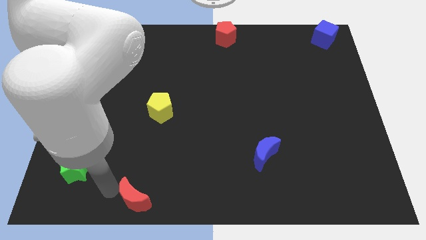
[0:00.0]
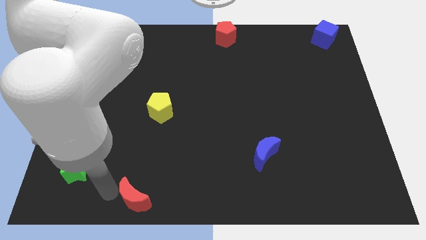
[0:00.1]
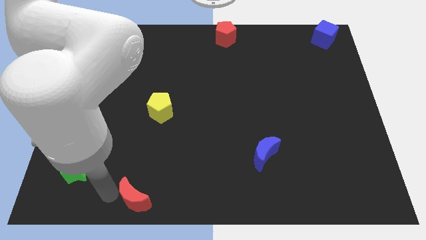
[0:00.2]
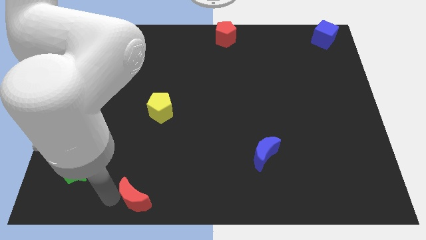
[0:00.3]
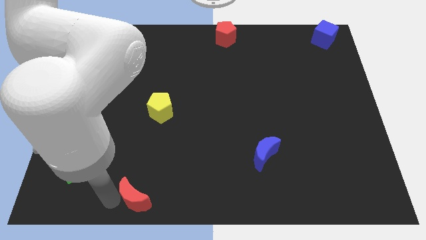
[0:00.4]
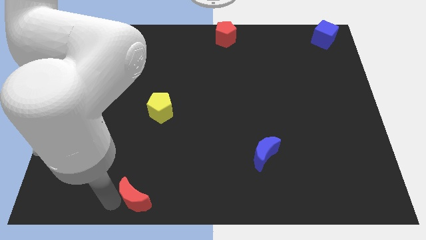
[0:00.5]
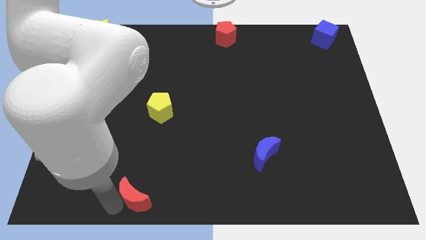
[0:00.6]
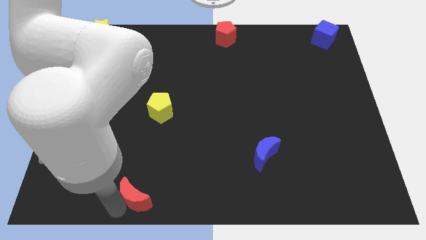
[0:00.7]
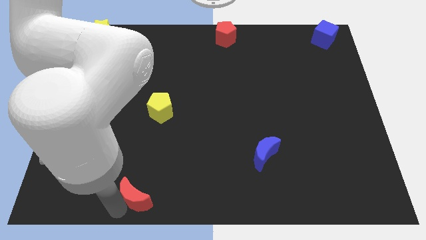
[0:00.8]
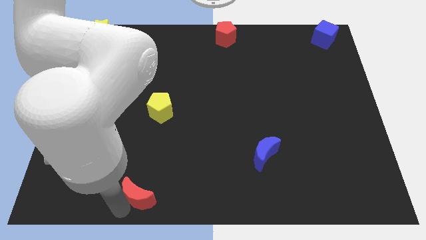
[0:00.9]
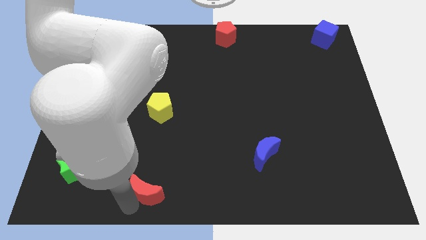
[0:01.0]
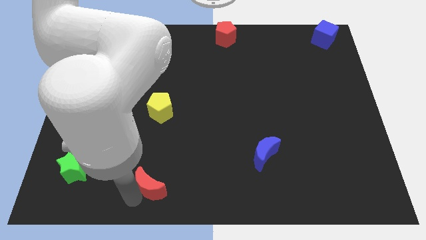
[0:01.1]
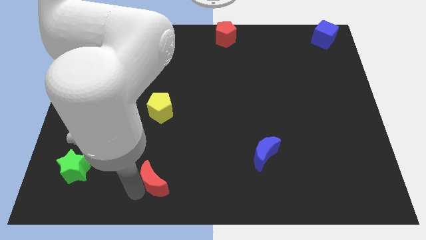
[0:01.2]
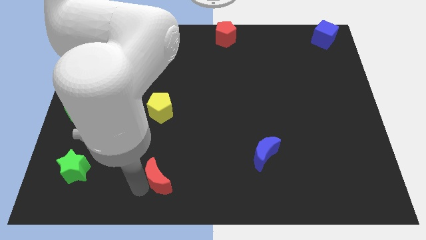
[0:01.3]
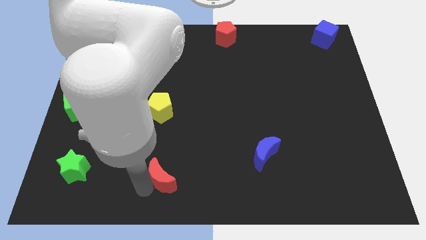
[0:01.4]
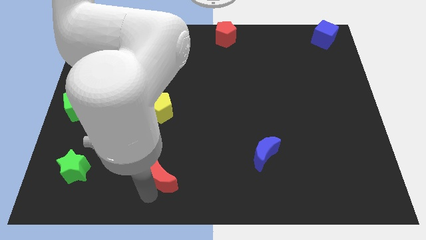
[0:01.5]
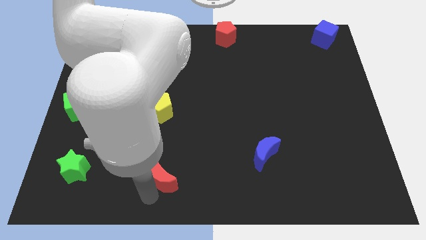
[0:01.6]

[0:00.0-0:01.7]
place the red moon vertically below the yellow pentagon

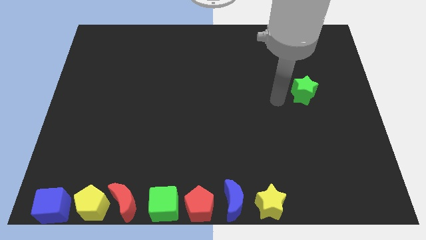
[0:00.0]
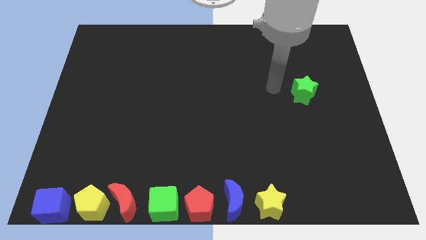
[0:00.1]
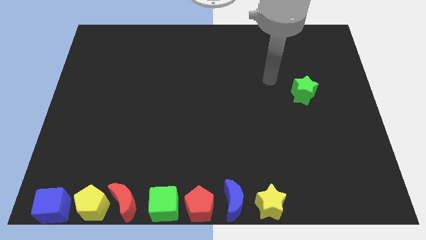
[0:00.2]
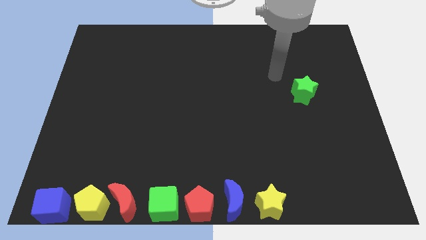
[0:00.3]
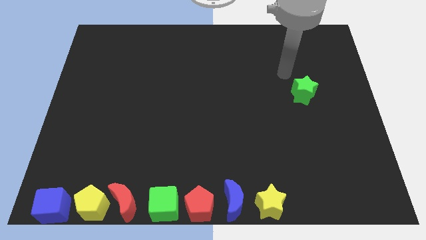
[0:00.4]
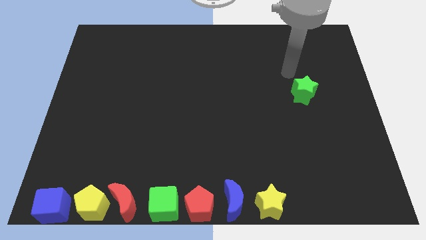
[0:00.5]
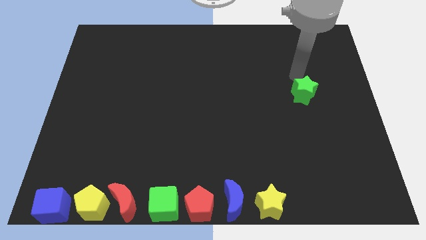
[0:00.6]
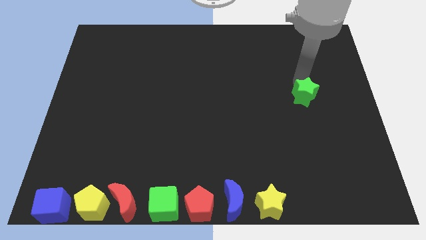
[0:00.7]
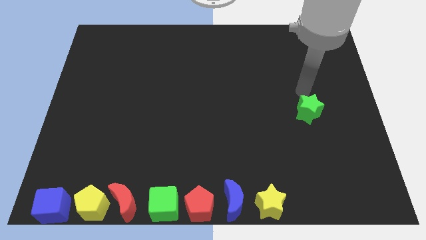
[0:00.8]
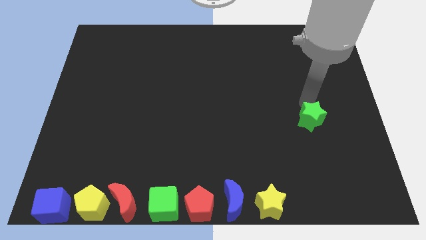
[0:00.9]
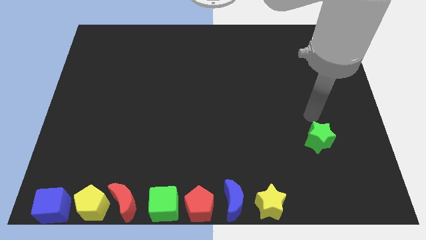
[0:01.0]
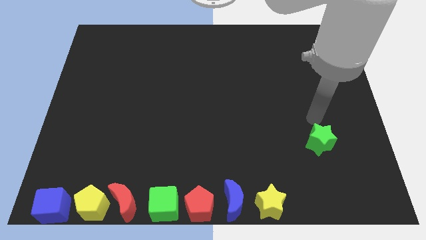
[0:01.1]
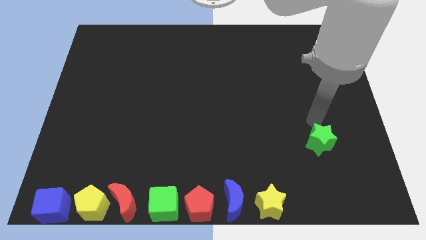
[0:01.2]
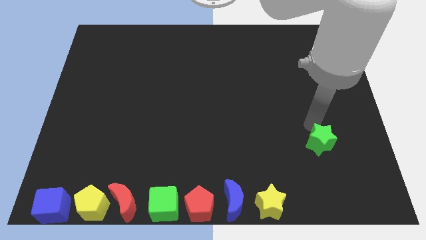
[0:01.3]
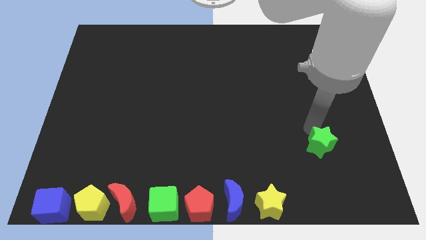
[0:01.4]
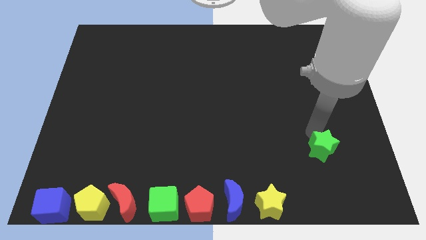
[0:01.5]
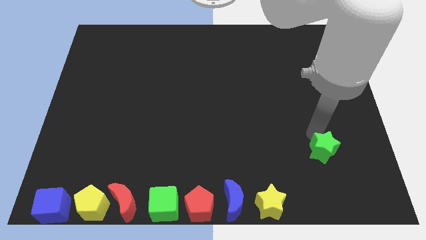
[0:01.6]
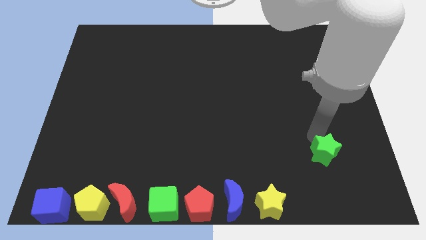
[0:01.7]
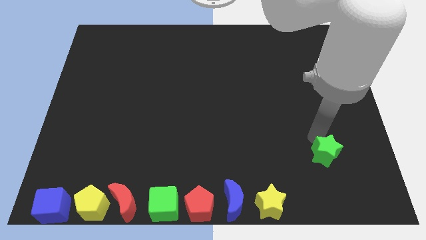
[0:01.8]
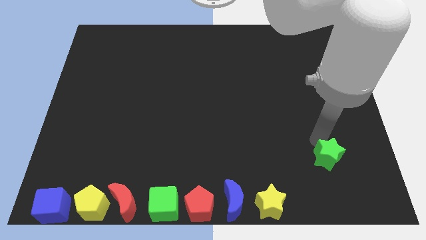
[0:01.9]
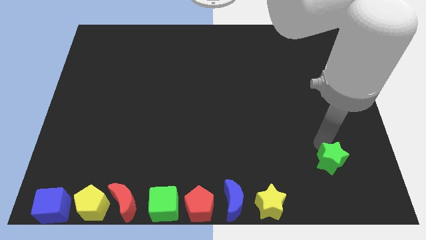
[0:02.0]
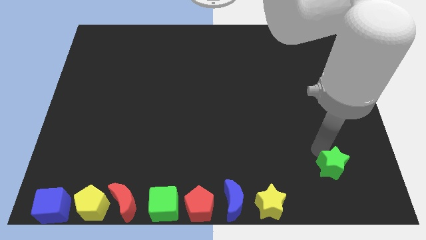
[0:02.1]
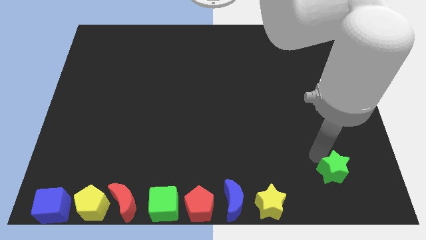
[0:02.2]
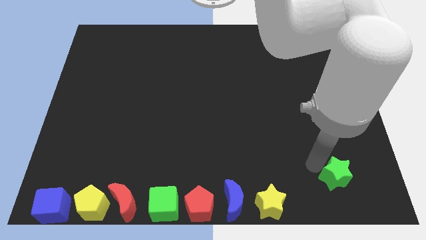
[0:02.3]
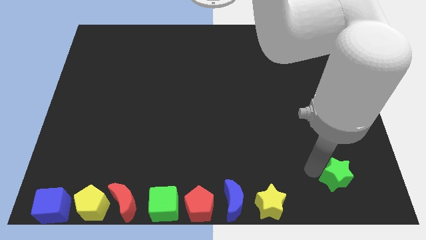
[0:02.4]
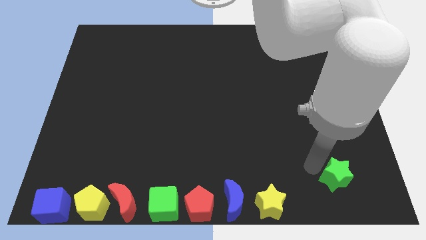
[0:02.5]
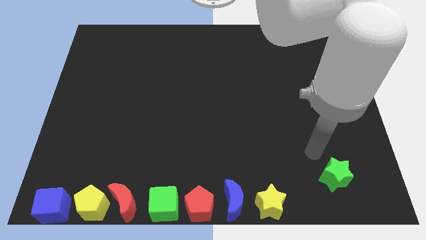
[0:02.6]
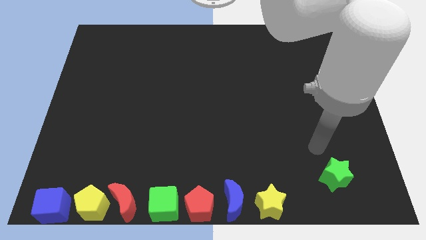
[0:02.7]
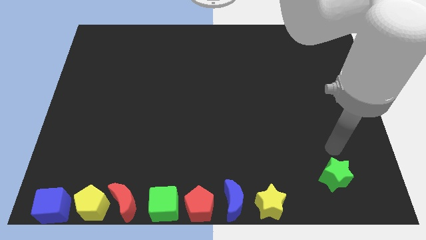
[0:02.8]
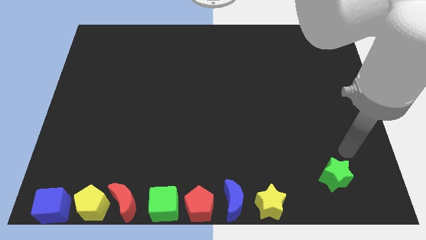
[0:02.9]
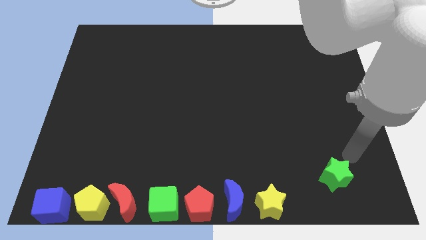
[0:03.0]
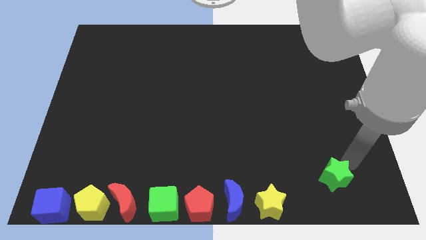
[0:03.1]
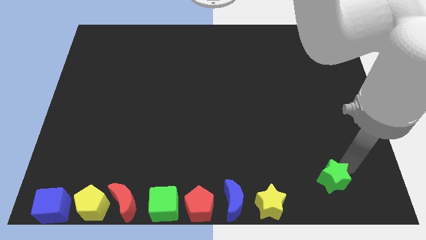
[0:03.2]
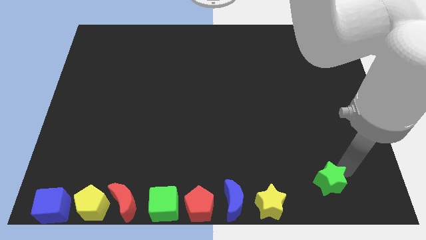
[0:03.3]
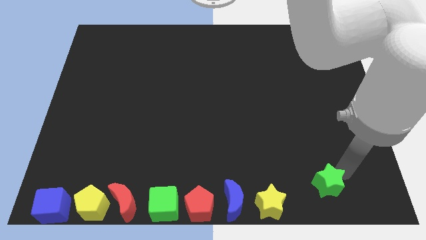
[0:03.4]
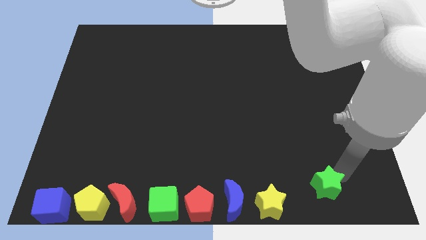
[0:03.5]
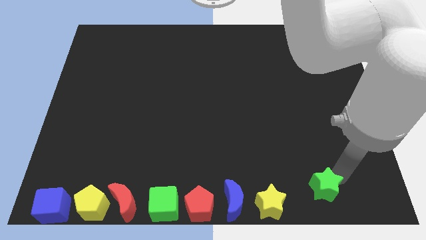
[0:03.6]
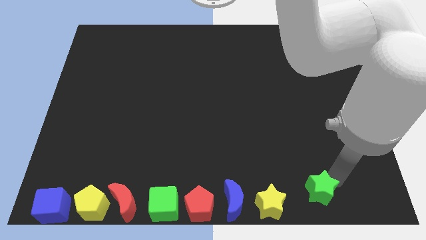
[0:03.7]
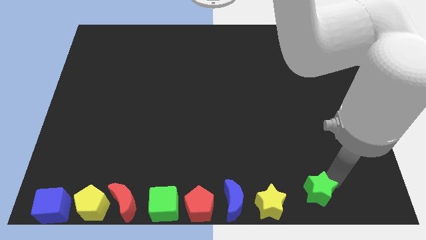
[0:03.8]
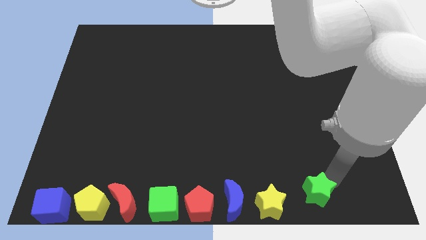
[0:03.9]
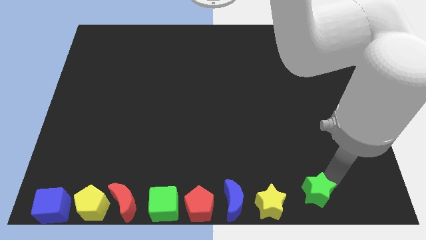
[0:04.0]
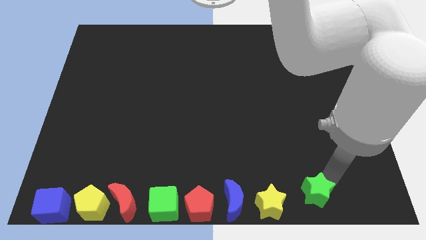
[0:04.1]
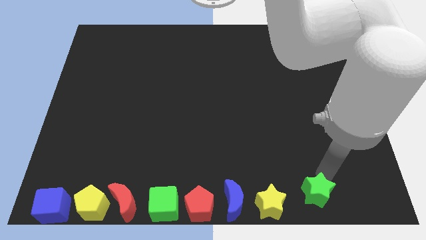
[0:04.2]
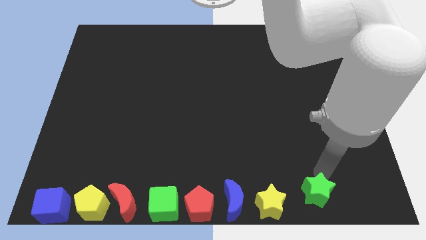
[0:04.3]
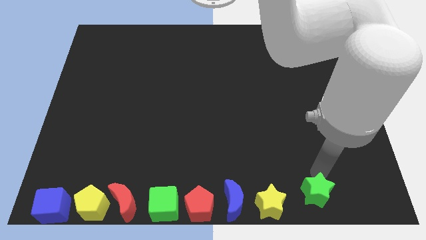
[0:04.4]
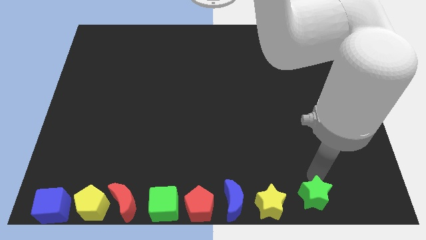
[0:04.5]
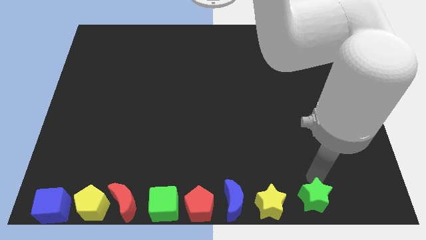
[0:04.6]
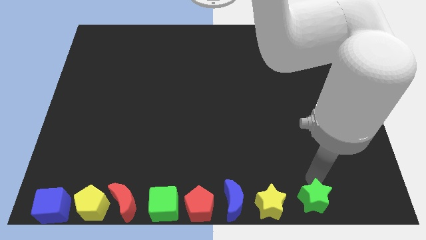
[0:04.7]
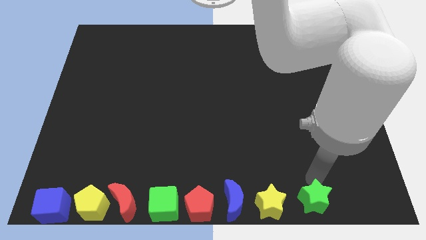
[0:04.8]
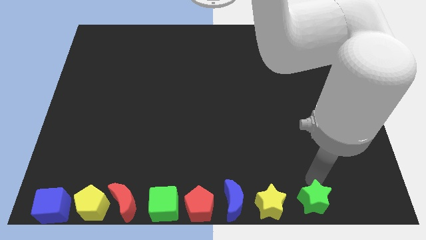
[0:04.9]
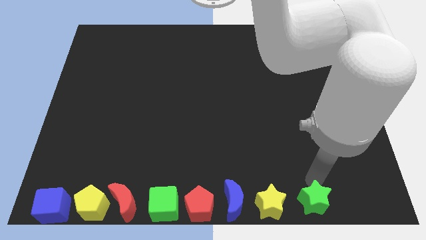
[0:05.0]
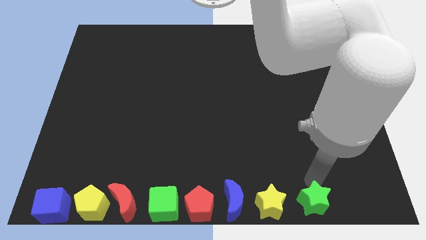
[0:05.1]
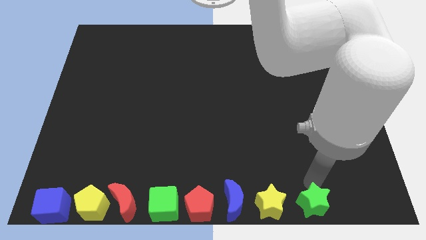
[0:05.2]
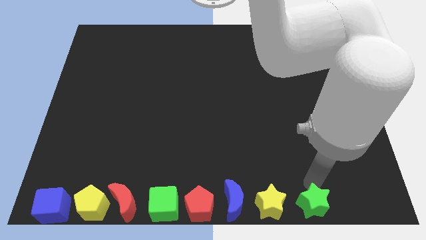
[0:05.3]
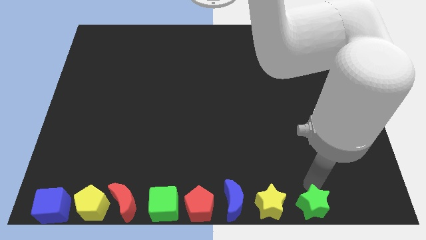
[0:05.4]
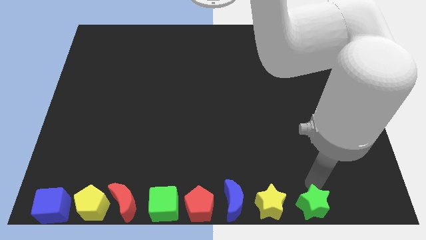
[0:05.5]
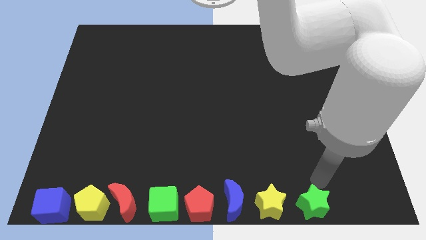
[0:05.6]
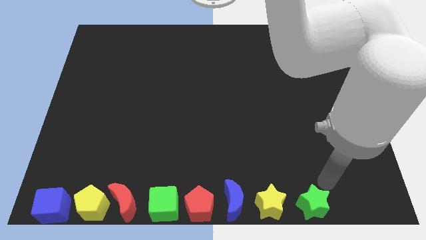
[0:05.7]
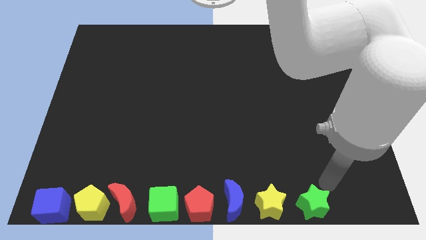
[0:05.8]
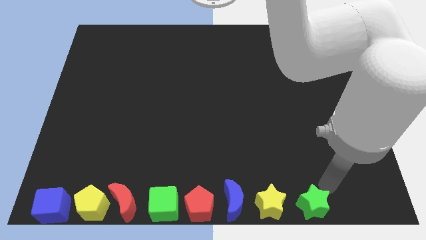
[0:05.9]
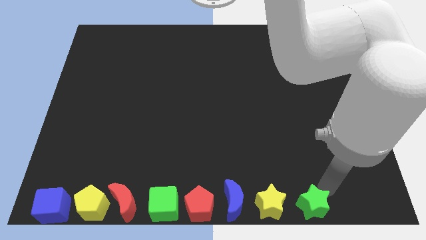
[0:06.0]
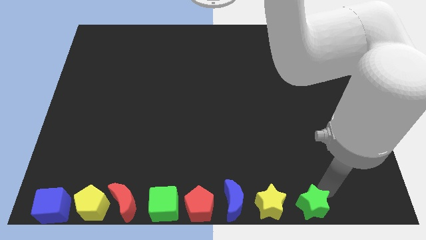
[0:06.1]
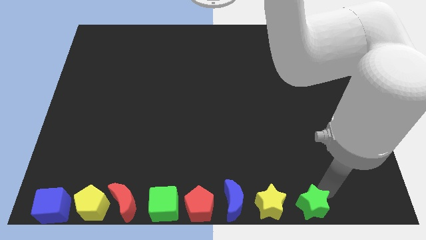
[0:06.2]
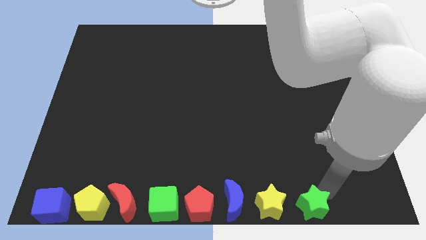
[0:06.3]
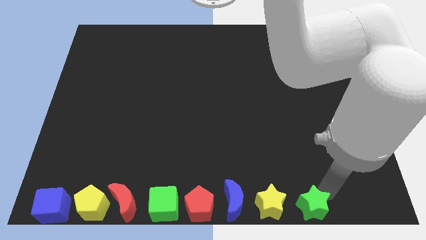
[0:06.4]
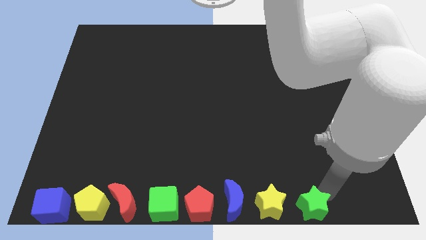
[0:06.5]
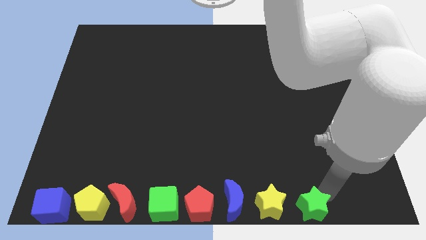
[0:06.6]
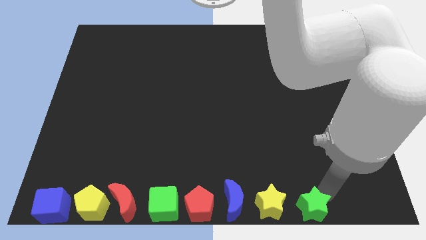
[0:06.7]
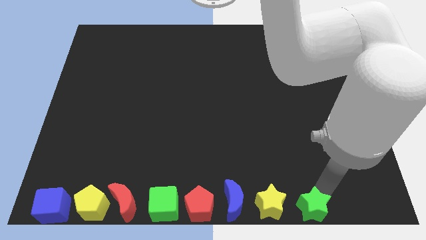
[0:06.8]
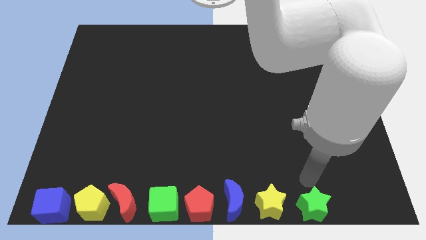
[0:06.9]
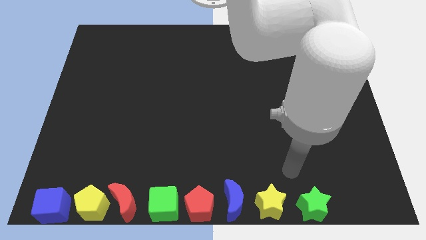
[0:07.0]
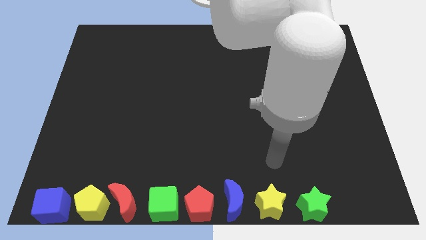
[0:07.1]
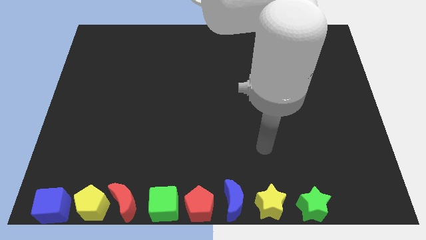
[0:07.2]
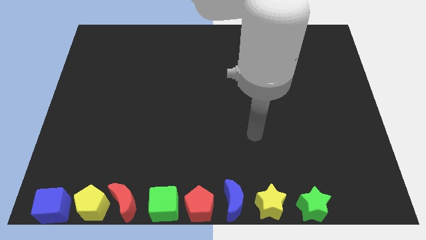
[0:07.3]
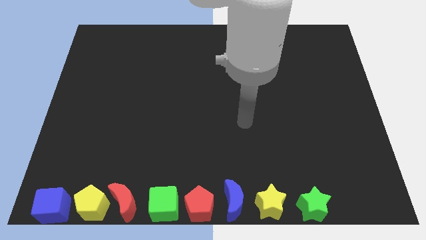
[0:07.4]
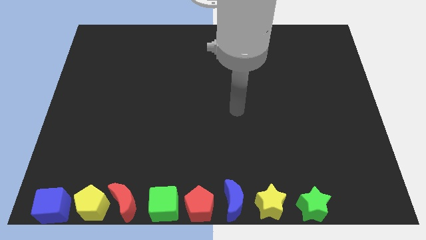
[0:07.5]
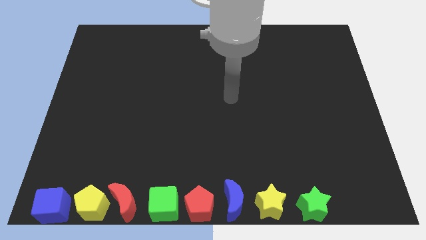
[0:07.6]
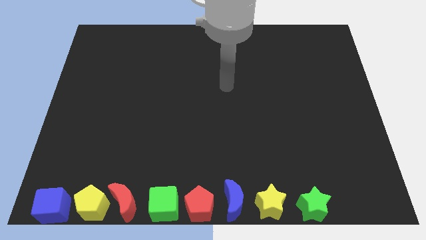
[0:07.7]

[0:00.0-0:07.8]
place the green star to the right side of the yellow star
